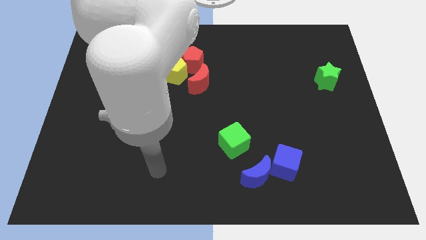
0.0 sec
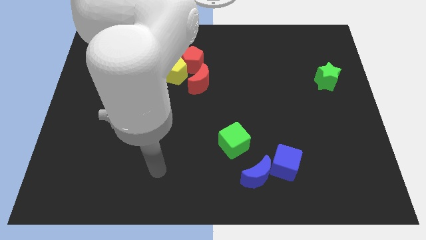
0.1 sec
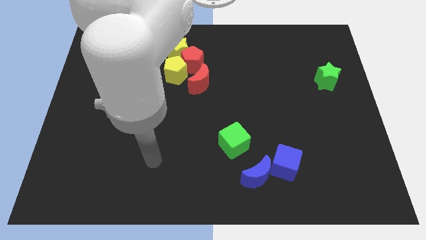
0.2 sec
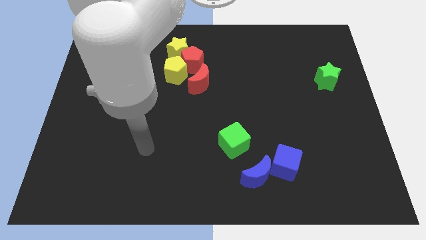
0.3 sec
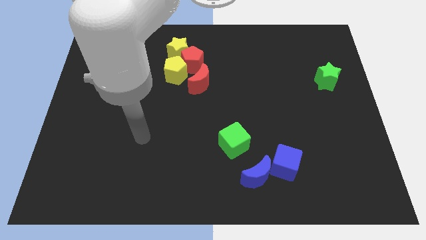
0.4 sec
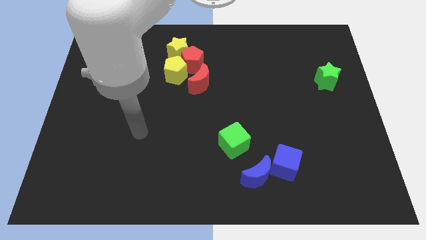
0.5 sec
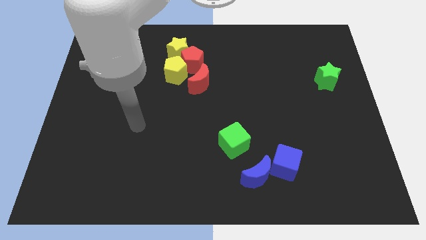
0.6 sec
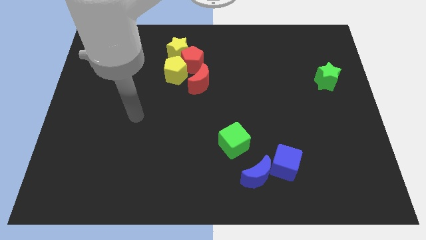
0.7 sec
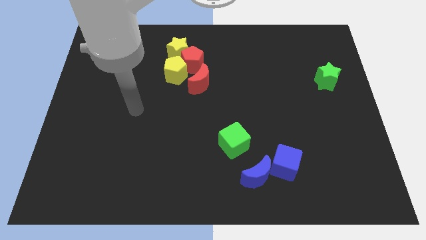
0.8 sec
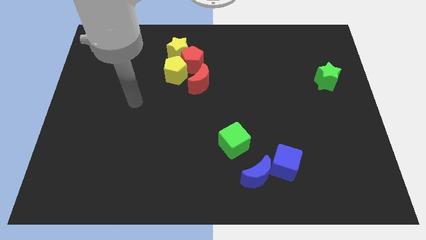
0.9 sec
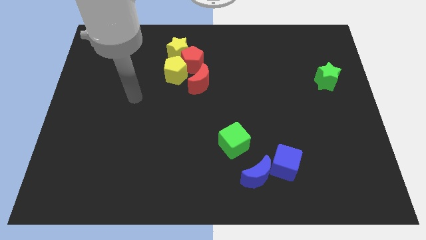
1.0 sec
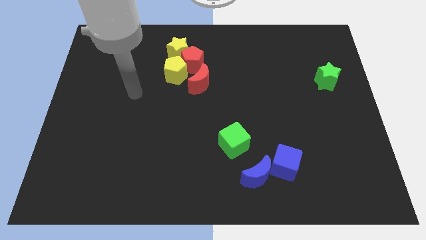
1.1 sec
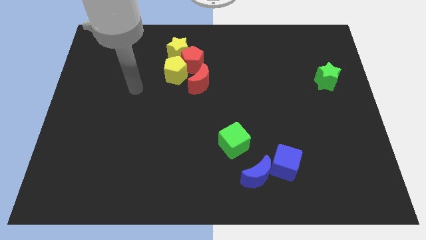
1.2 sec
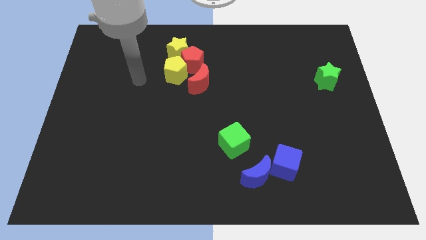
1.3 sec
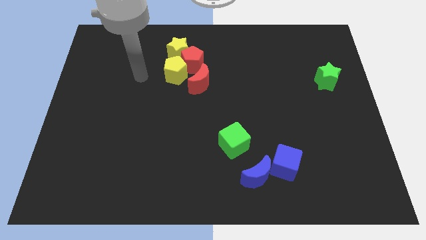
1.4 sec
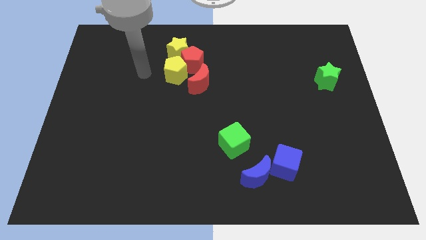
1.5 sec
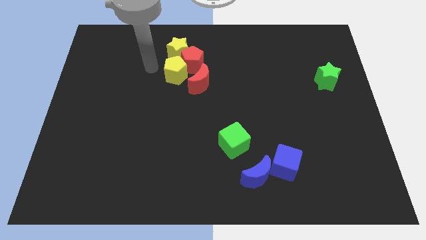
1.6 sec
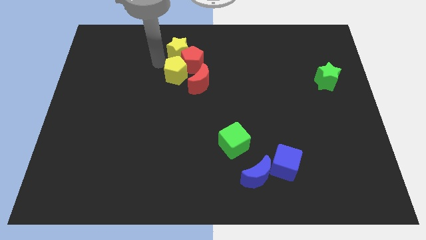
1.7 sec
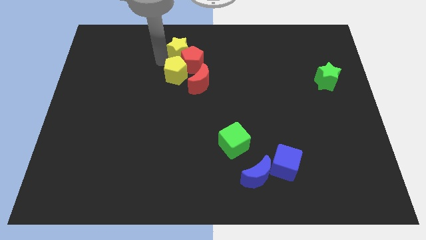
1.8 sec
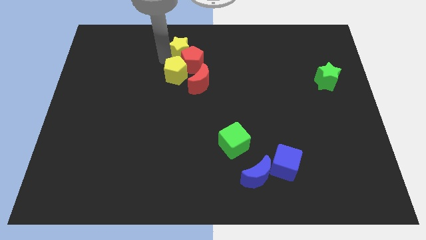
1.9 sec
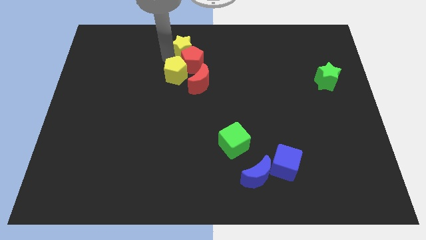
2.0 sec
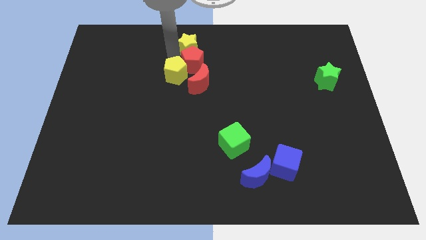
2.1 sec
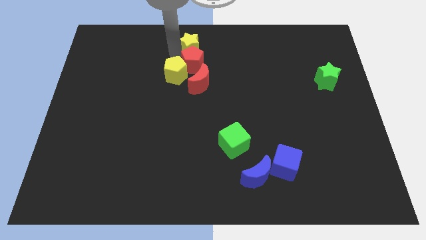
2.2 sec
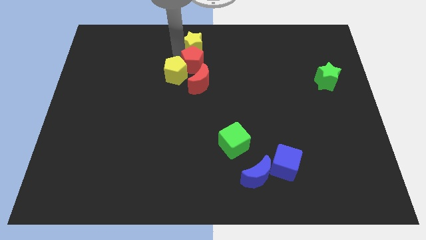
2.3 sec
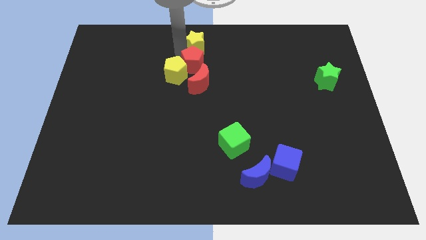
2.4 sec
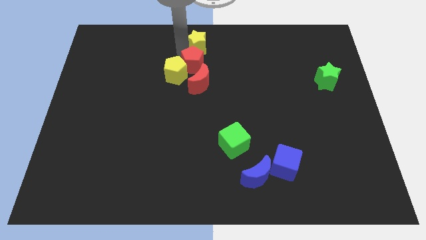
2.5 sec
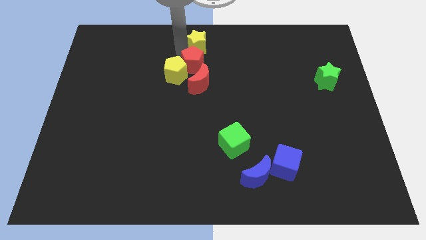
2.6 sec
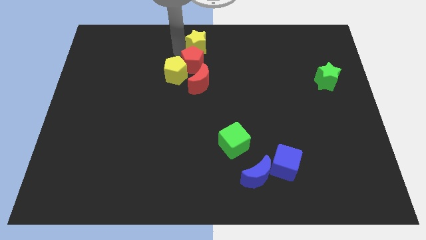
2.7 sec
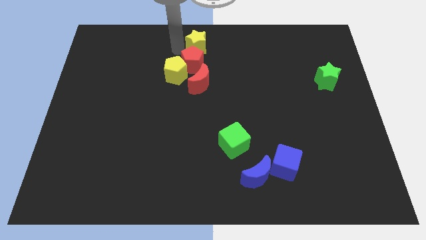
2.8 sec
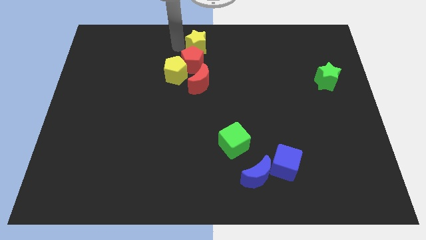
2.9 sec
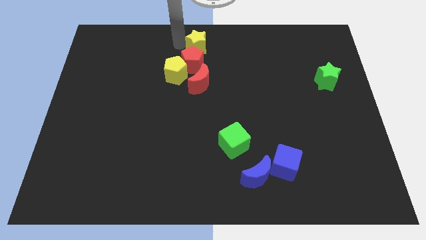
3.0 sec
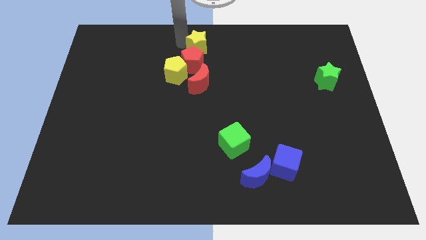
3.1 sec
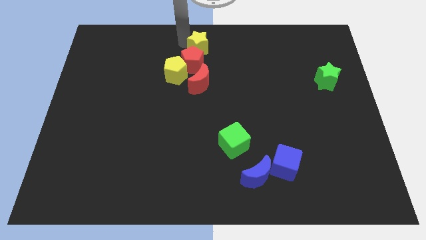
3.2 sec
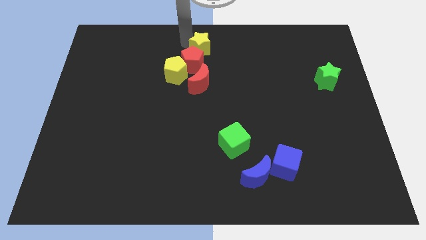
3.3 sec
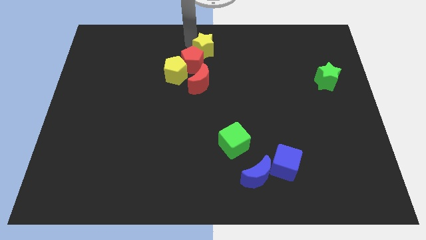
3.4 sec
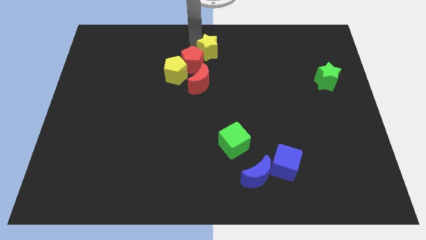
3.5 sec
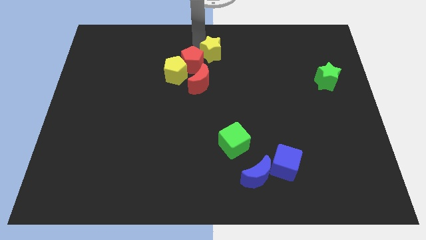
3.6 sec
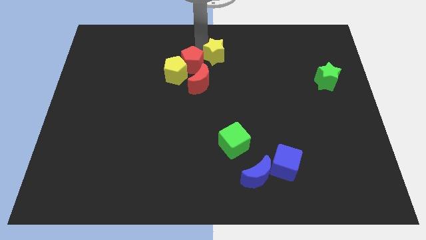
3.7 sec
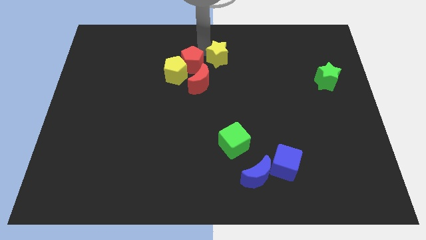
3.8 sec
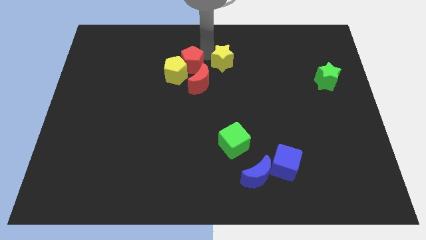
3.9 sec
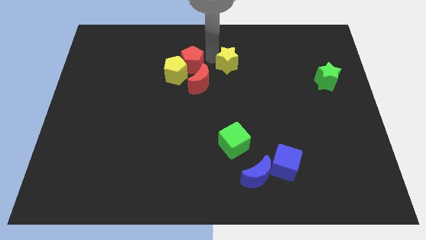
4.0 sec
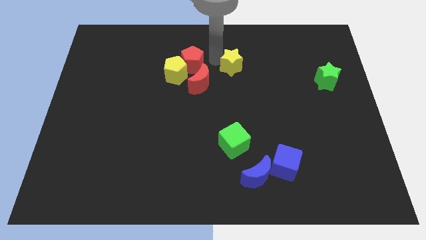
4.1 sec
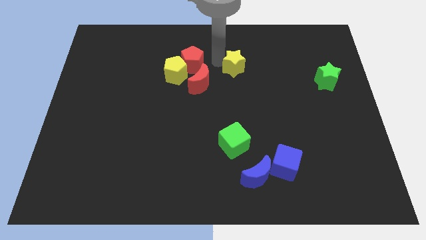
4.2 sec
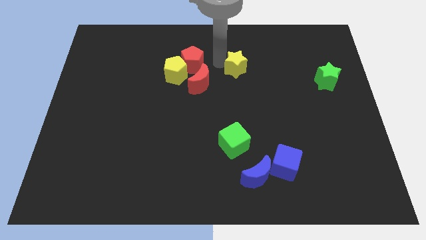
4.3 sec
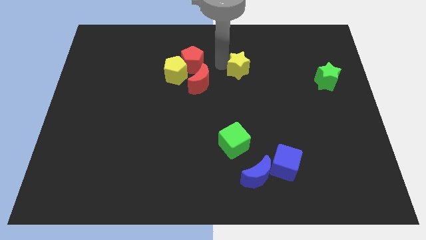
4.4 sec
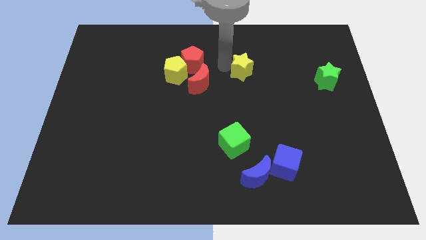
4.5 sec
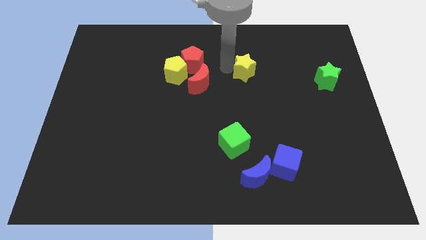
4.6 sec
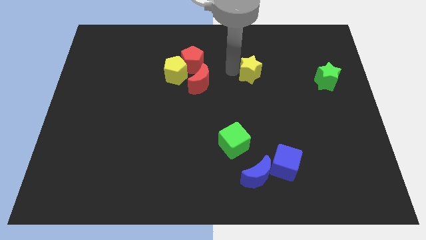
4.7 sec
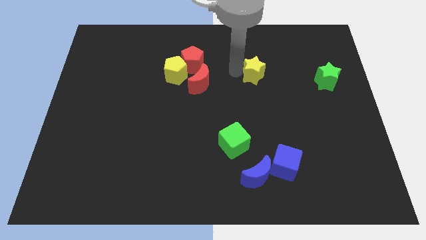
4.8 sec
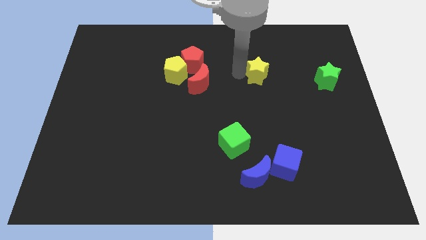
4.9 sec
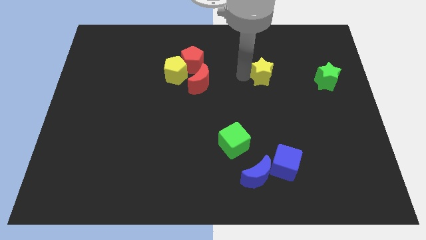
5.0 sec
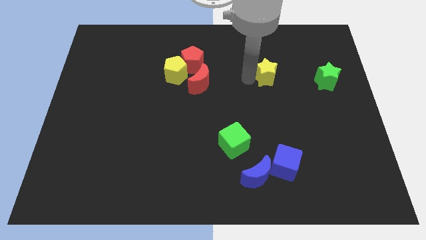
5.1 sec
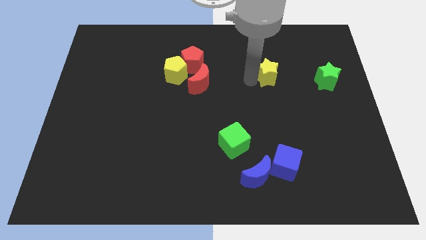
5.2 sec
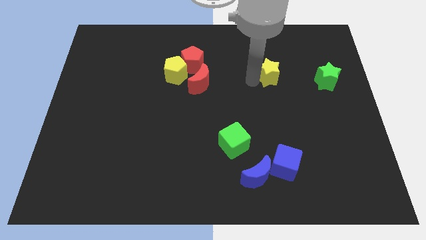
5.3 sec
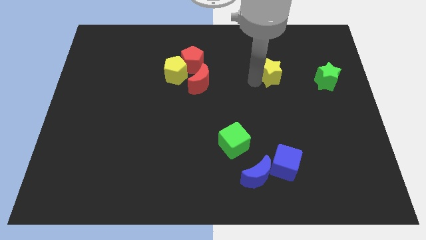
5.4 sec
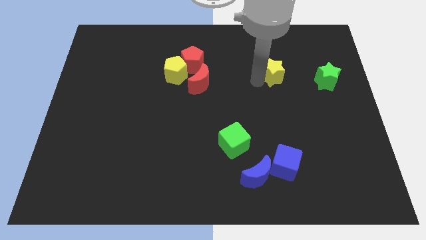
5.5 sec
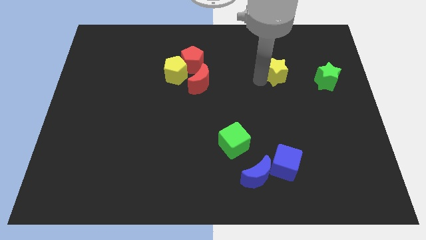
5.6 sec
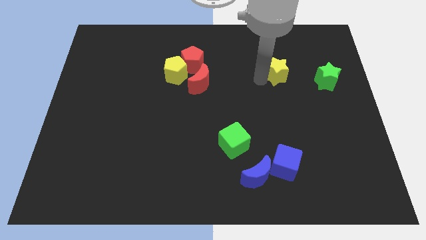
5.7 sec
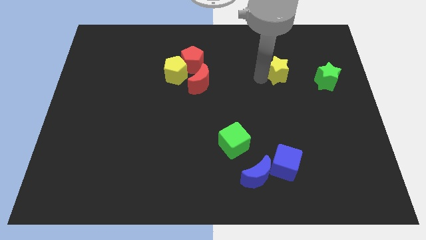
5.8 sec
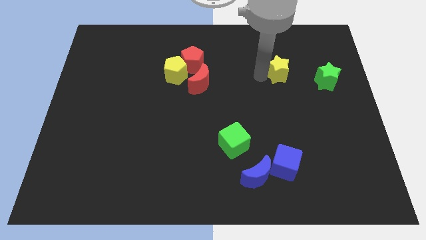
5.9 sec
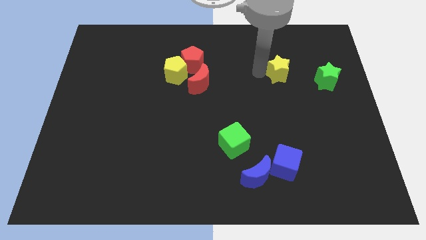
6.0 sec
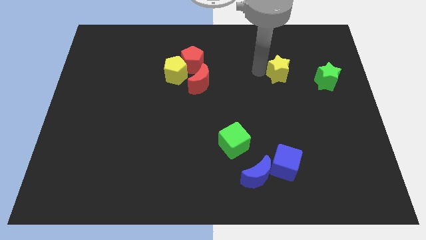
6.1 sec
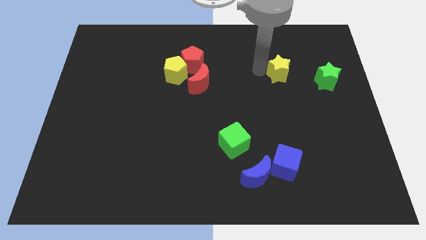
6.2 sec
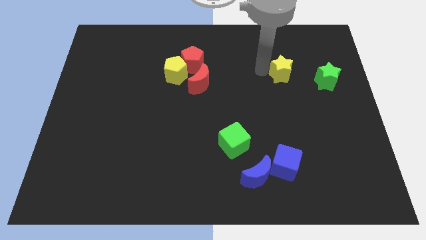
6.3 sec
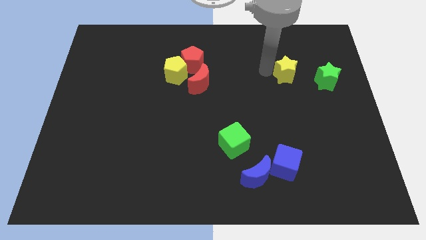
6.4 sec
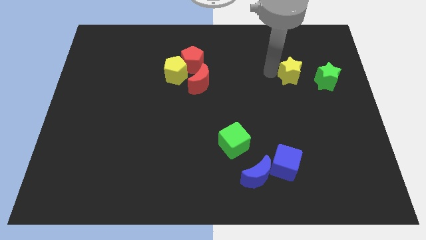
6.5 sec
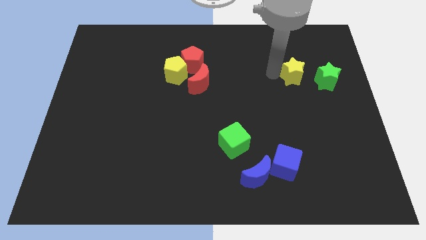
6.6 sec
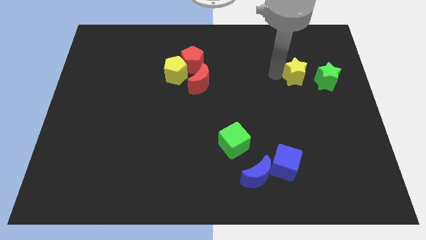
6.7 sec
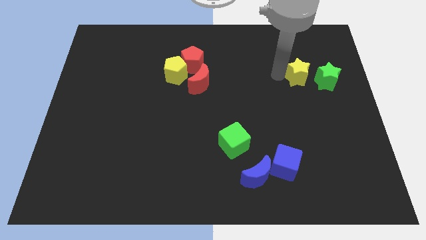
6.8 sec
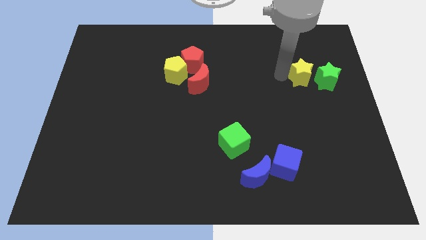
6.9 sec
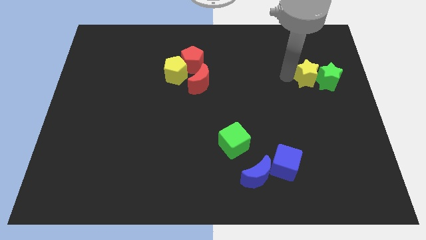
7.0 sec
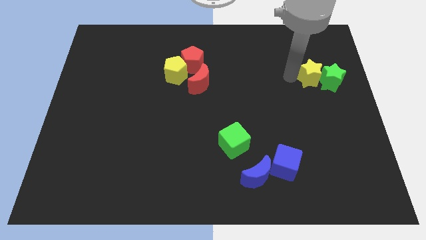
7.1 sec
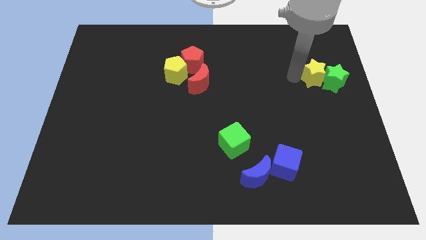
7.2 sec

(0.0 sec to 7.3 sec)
move the yellow star close to the green star

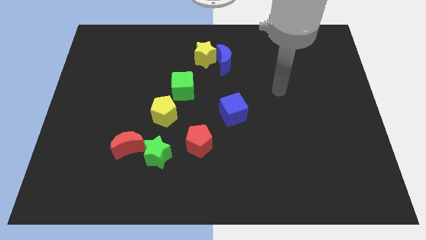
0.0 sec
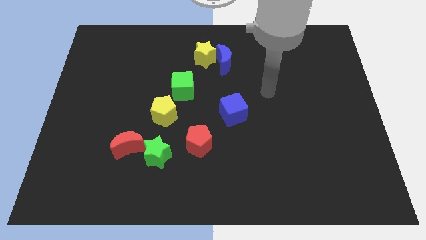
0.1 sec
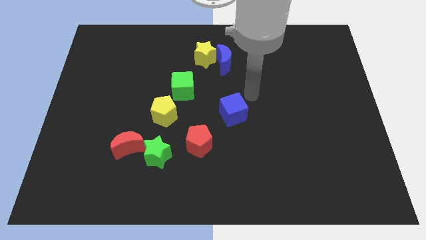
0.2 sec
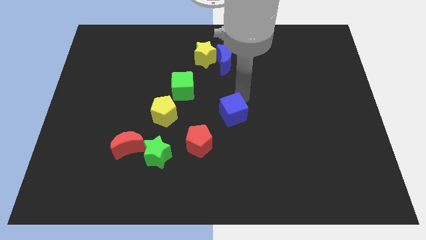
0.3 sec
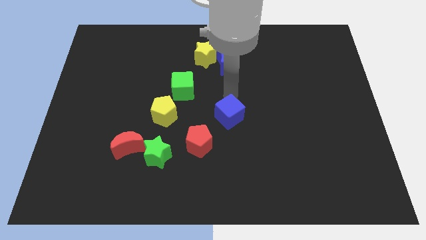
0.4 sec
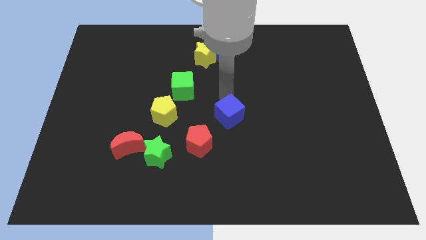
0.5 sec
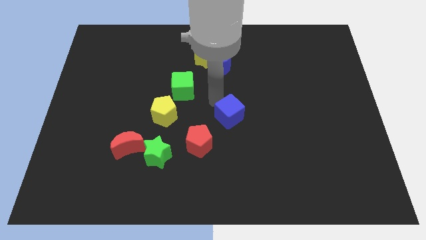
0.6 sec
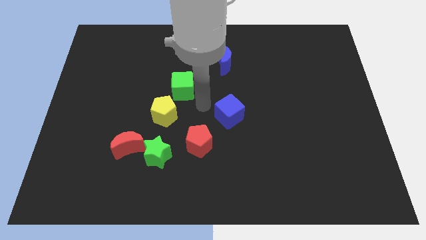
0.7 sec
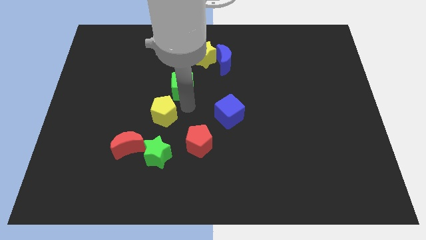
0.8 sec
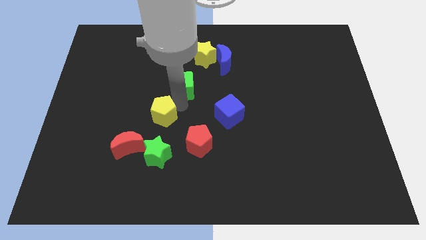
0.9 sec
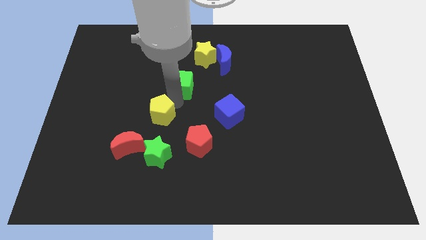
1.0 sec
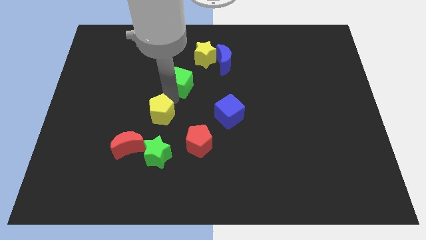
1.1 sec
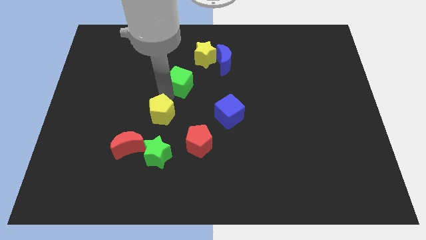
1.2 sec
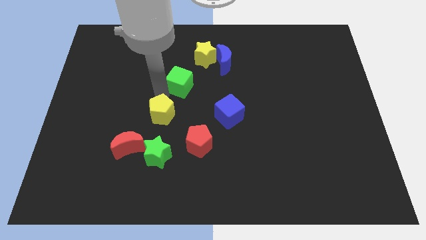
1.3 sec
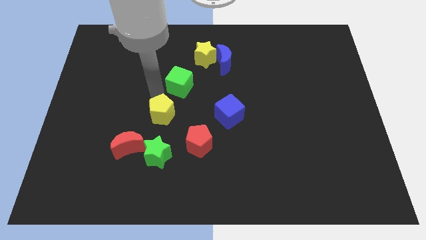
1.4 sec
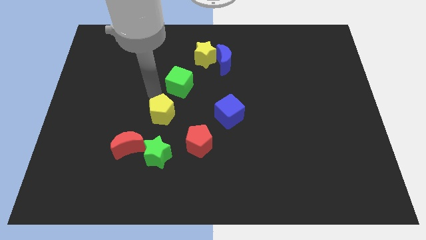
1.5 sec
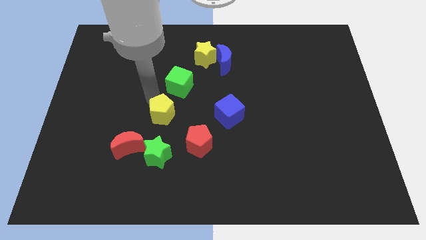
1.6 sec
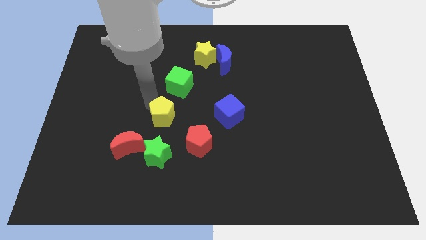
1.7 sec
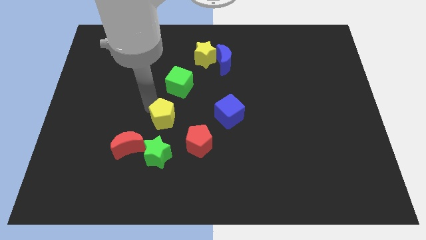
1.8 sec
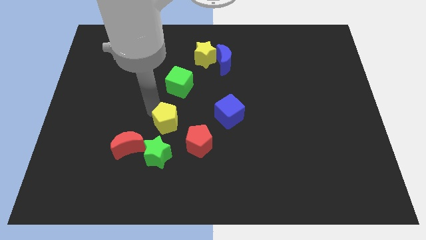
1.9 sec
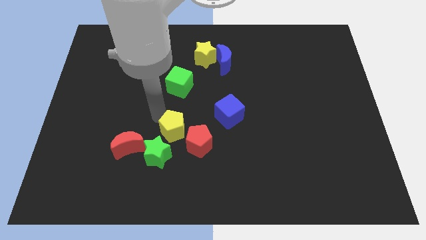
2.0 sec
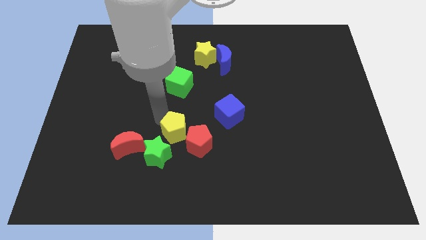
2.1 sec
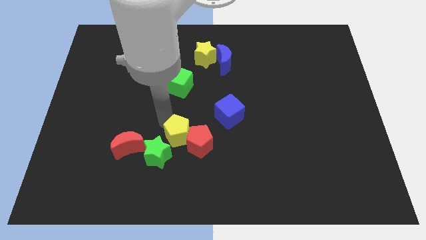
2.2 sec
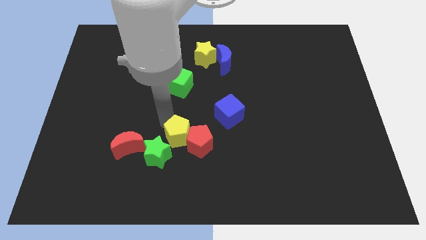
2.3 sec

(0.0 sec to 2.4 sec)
move the yellow pentagon to the red pentagon
